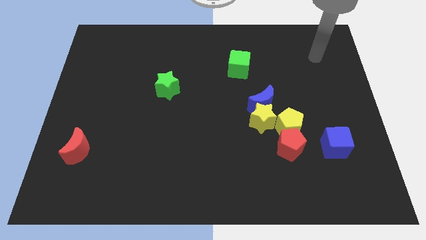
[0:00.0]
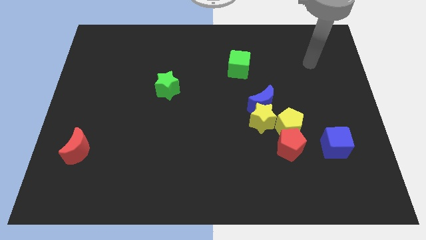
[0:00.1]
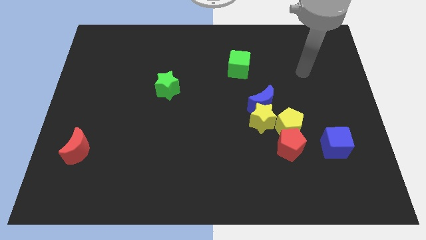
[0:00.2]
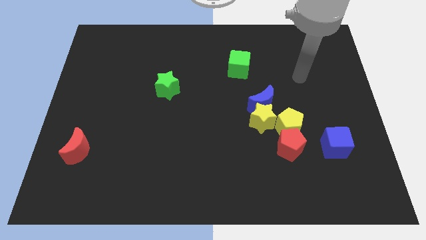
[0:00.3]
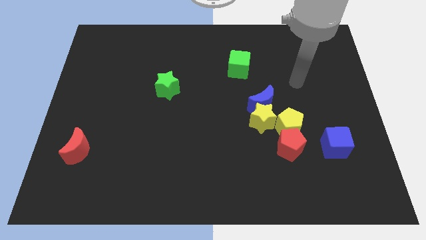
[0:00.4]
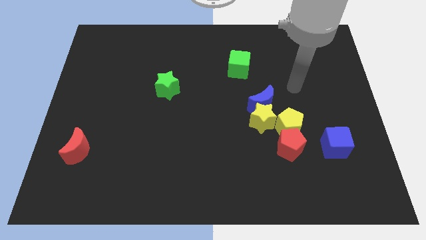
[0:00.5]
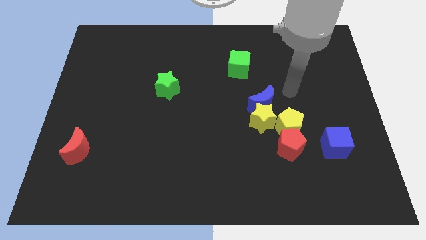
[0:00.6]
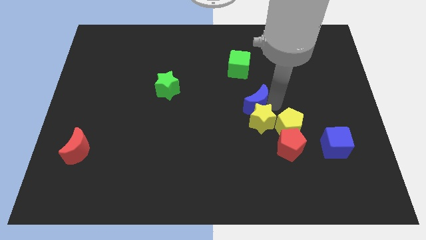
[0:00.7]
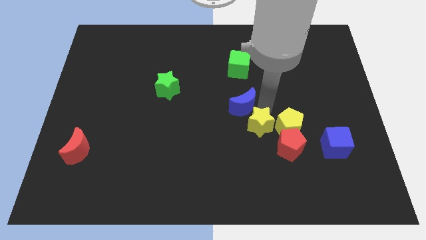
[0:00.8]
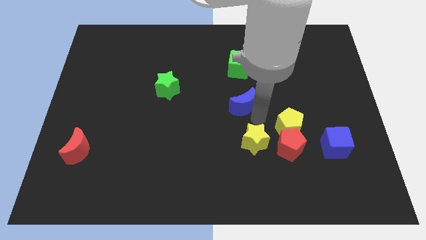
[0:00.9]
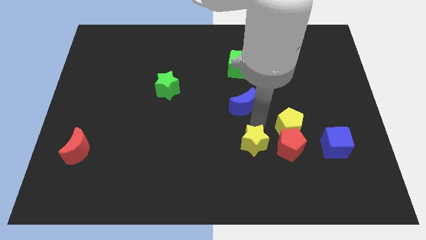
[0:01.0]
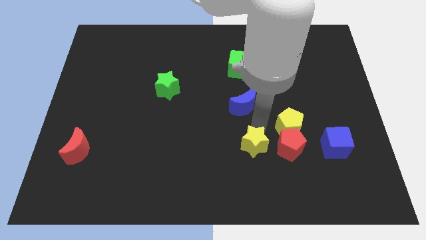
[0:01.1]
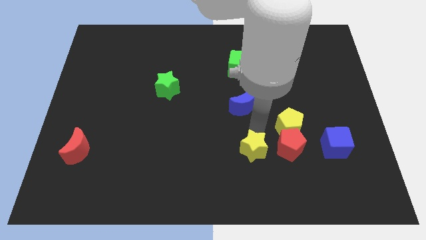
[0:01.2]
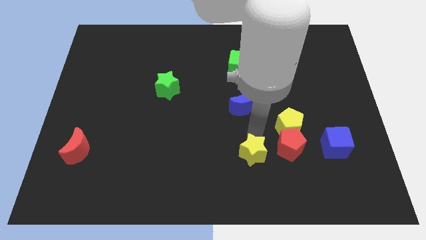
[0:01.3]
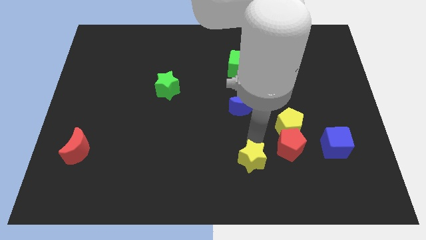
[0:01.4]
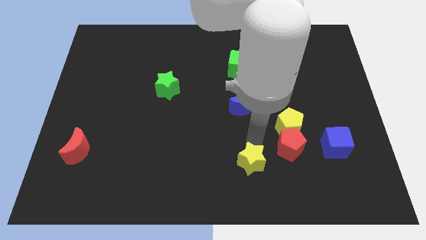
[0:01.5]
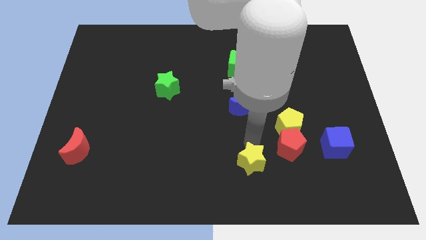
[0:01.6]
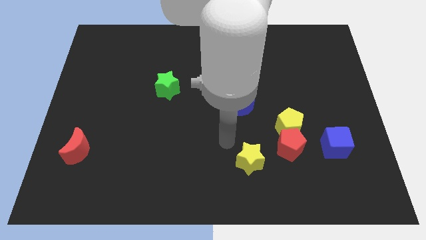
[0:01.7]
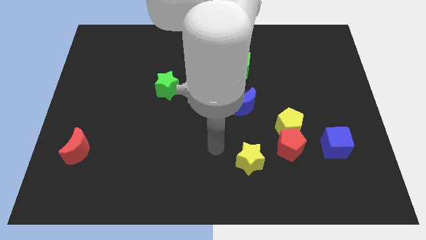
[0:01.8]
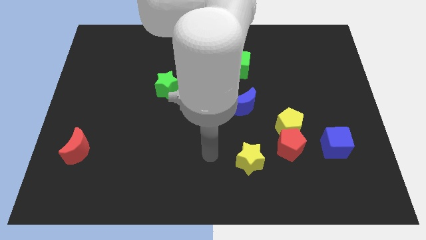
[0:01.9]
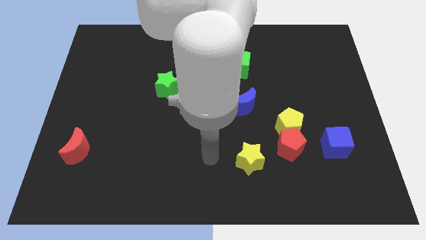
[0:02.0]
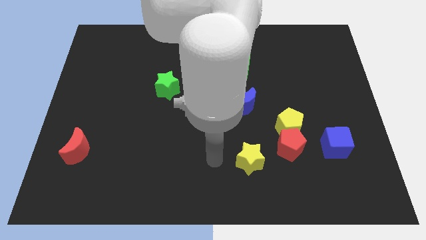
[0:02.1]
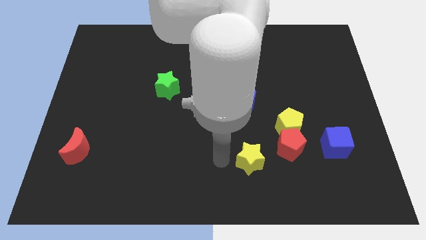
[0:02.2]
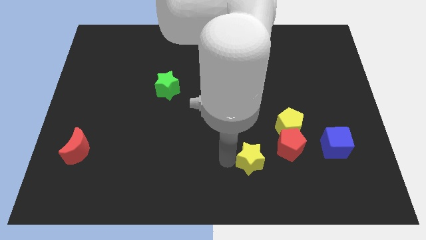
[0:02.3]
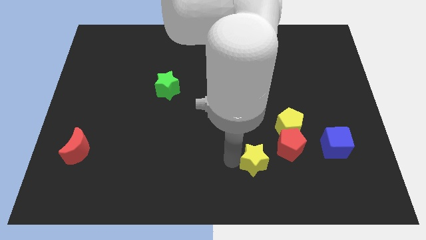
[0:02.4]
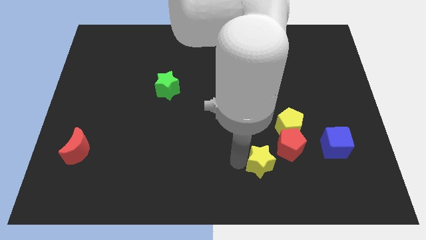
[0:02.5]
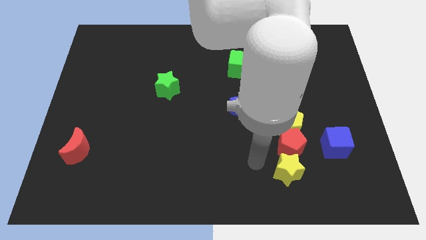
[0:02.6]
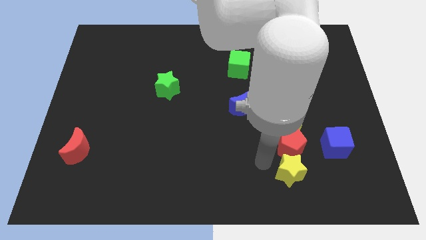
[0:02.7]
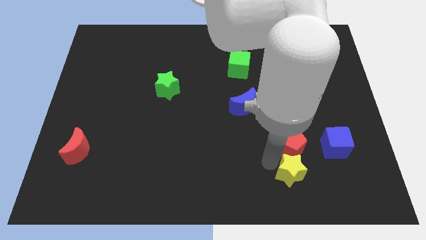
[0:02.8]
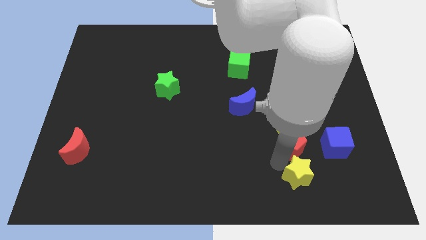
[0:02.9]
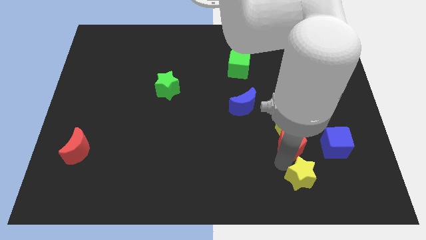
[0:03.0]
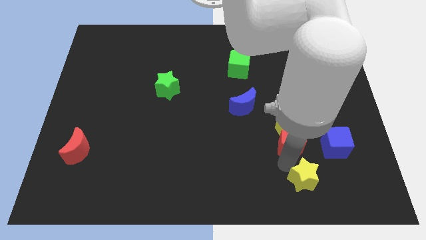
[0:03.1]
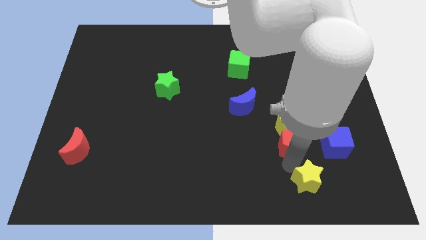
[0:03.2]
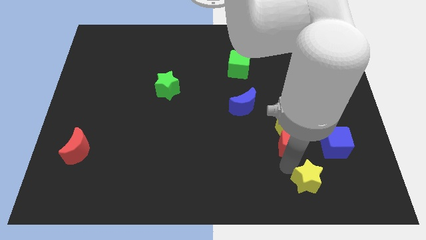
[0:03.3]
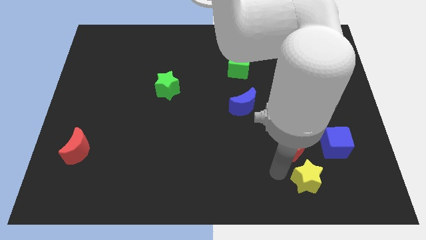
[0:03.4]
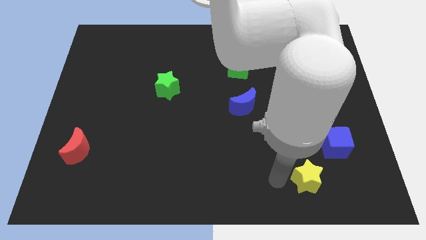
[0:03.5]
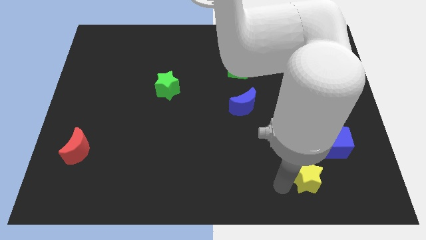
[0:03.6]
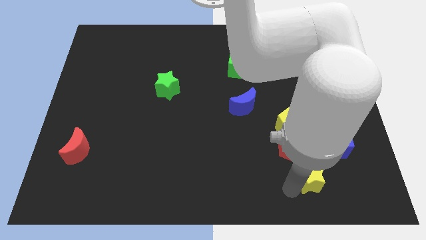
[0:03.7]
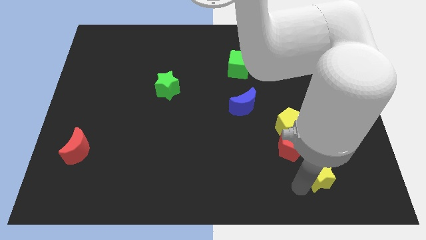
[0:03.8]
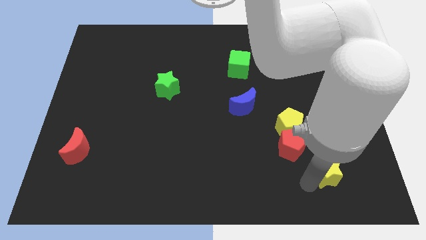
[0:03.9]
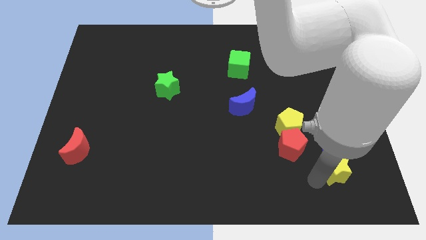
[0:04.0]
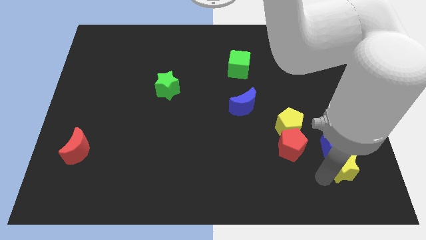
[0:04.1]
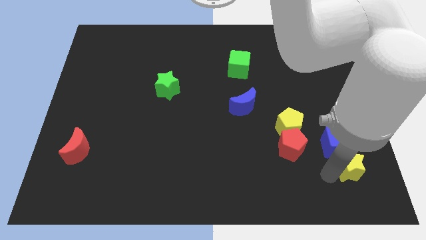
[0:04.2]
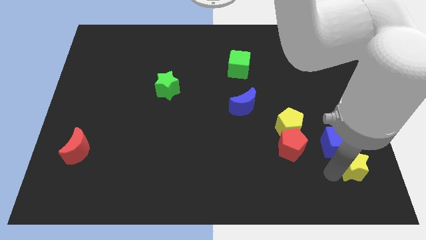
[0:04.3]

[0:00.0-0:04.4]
push the yellow star close to the blue cube

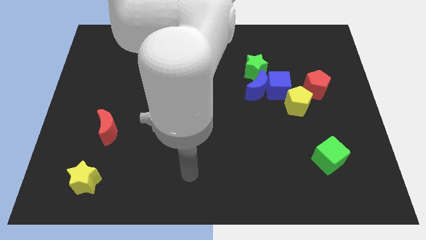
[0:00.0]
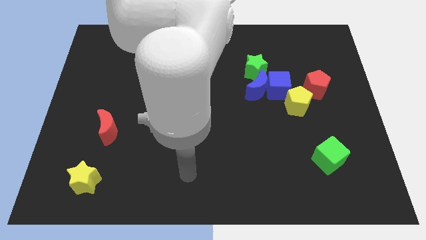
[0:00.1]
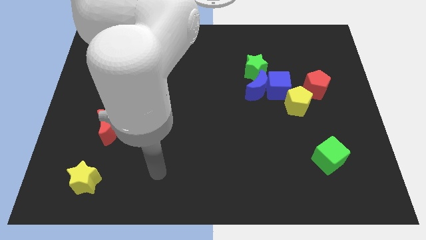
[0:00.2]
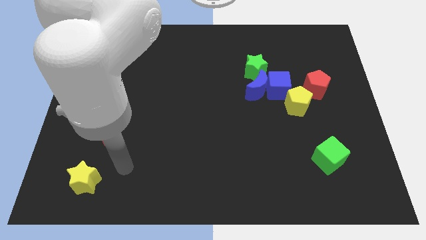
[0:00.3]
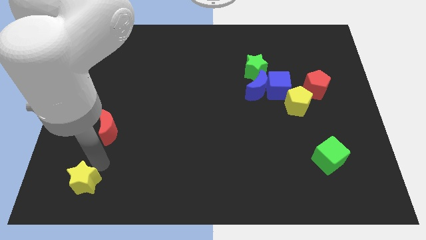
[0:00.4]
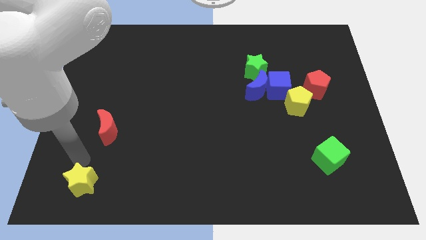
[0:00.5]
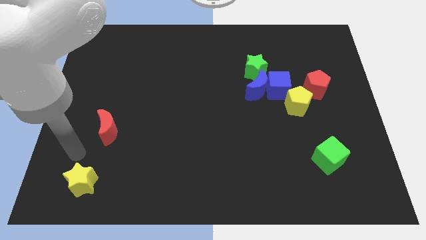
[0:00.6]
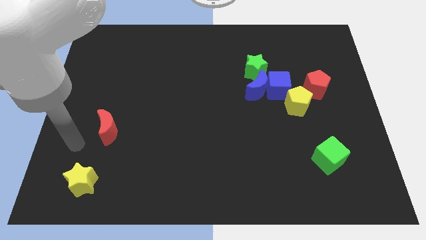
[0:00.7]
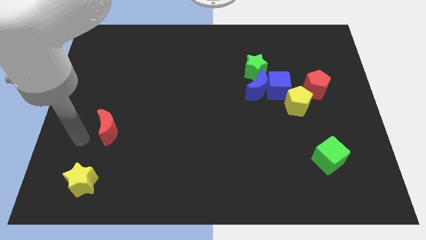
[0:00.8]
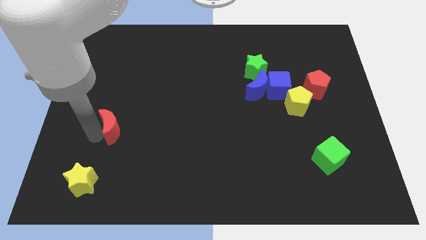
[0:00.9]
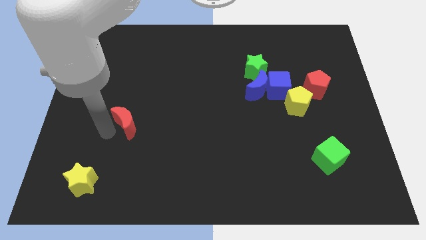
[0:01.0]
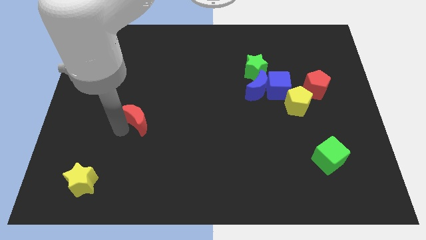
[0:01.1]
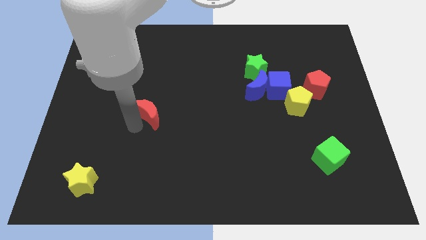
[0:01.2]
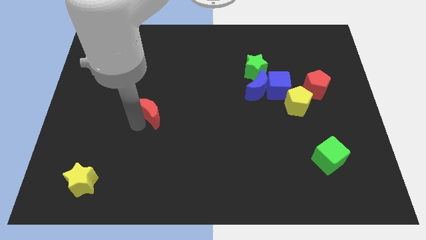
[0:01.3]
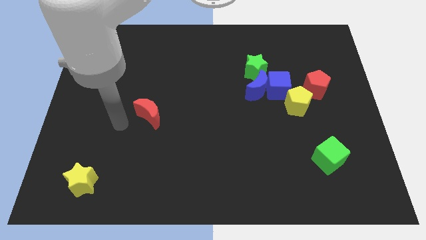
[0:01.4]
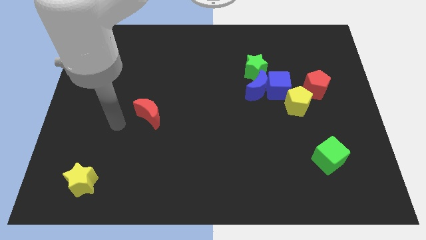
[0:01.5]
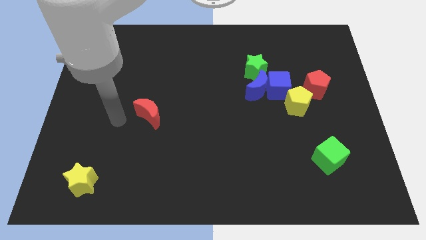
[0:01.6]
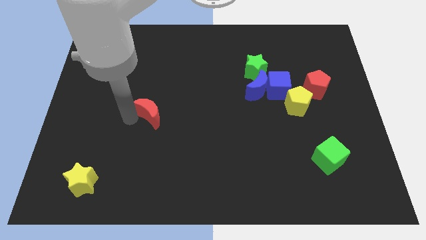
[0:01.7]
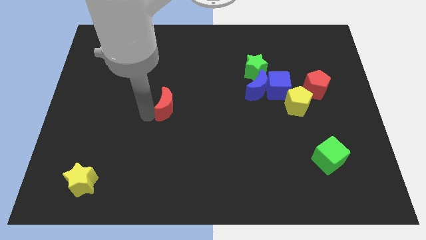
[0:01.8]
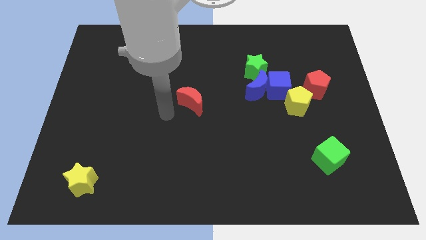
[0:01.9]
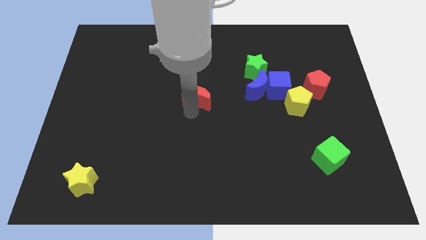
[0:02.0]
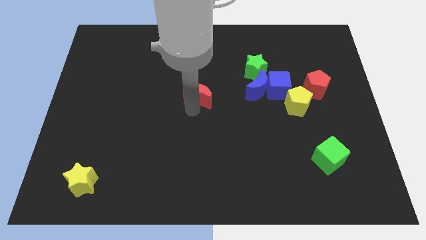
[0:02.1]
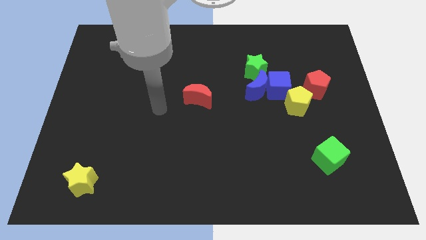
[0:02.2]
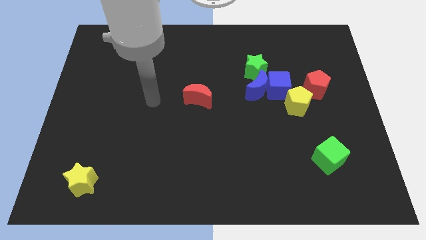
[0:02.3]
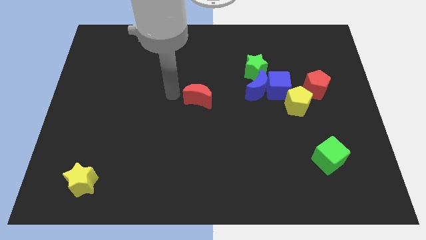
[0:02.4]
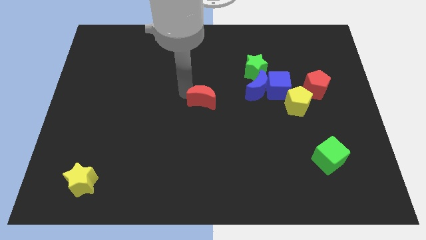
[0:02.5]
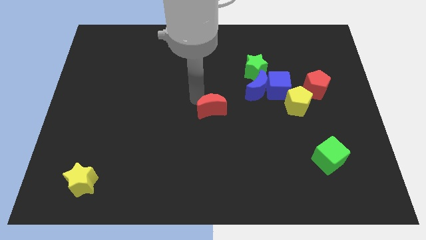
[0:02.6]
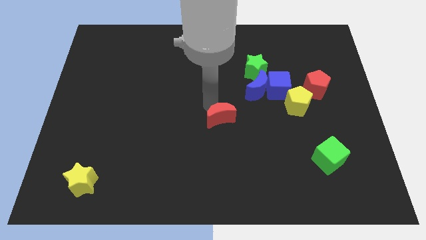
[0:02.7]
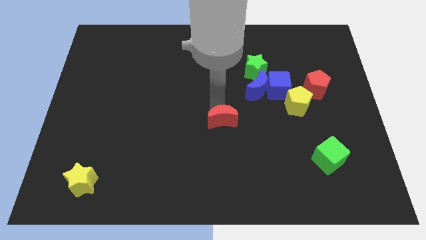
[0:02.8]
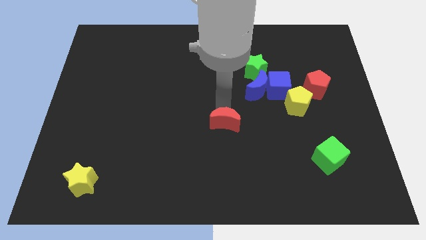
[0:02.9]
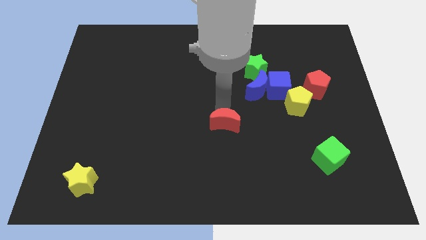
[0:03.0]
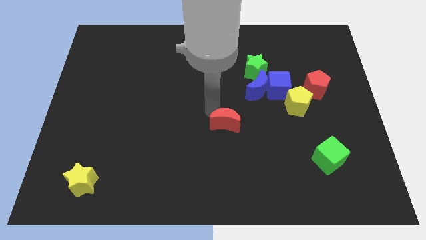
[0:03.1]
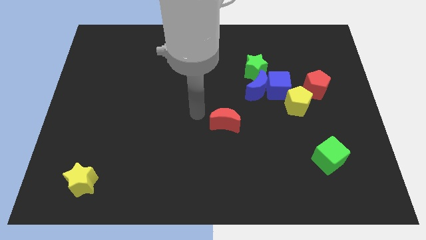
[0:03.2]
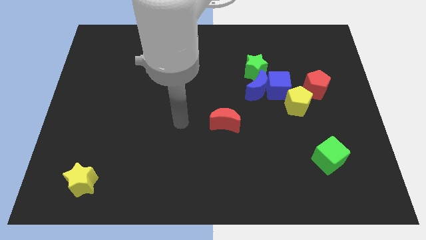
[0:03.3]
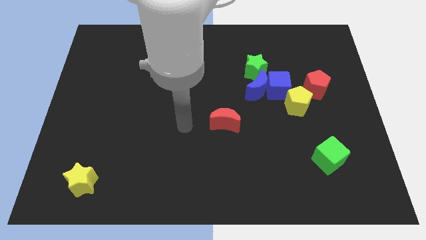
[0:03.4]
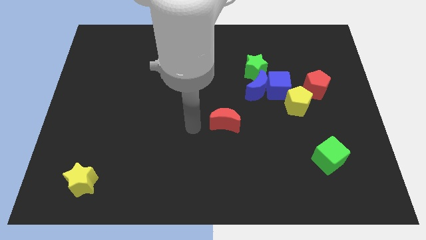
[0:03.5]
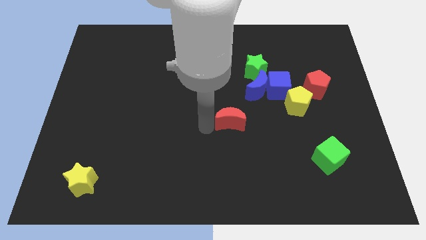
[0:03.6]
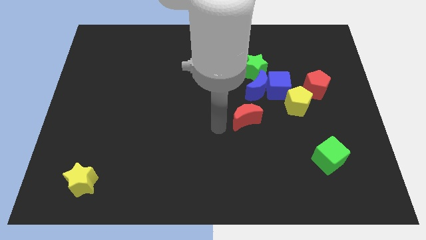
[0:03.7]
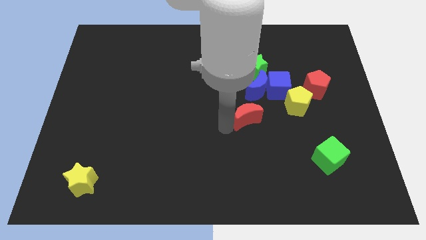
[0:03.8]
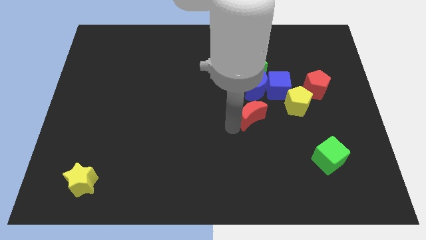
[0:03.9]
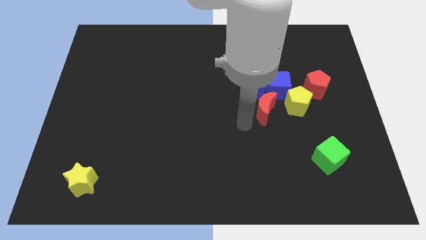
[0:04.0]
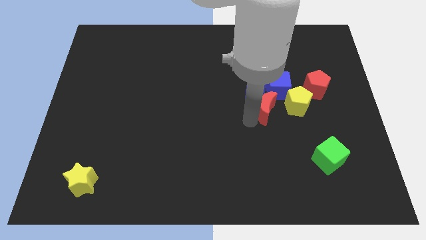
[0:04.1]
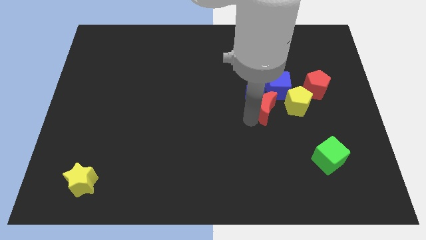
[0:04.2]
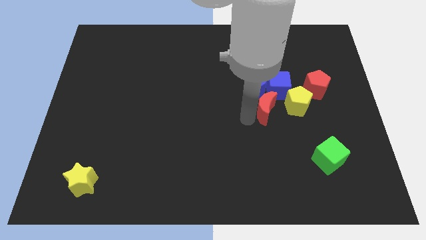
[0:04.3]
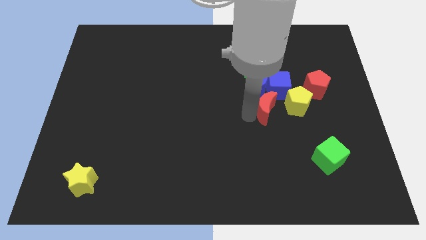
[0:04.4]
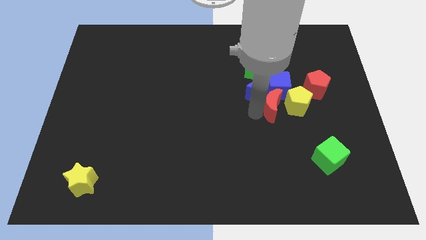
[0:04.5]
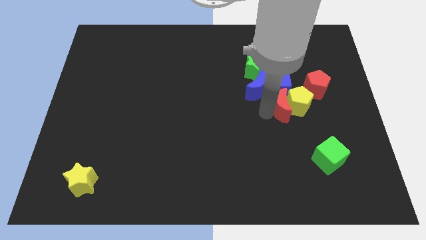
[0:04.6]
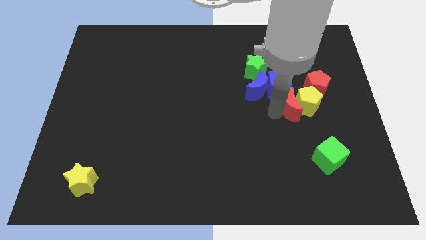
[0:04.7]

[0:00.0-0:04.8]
slide the red moon to the yellow pentagon
